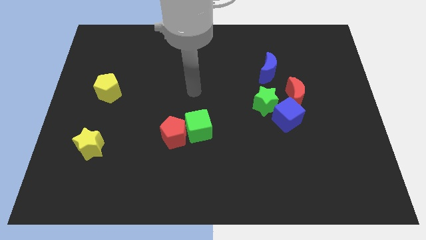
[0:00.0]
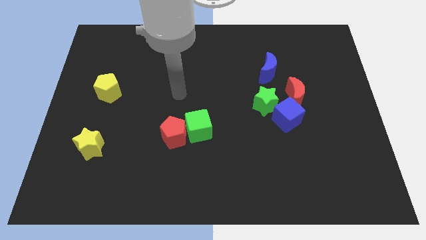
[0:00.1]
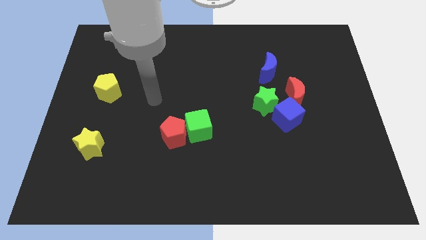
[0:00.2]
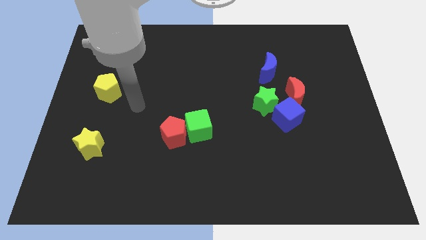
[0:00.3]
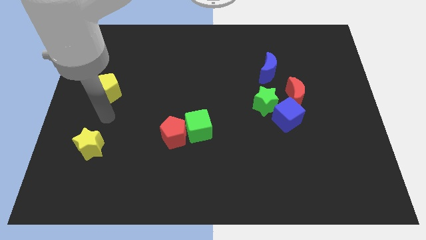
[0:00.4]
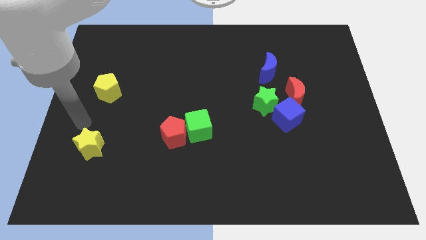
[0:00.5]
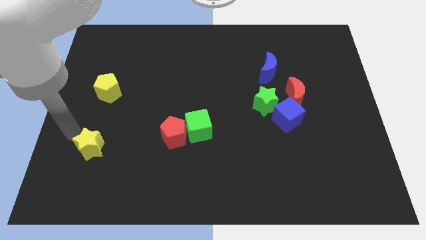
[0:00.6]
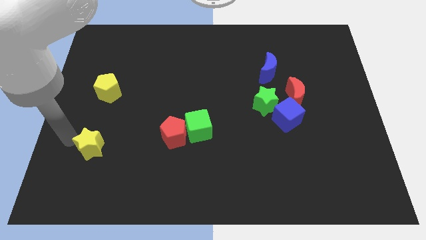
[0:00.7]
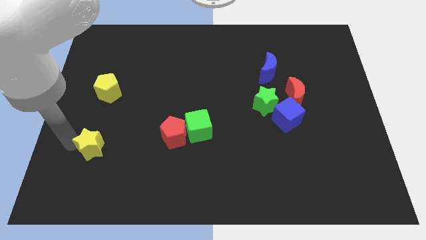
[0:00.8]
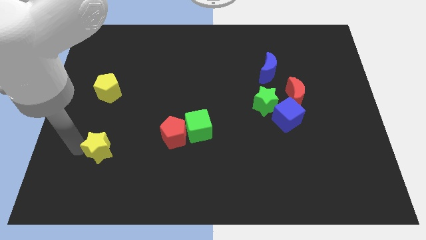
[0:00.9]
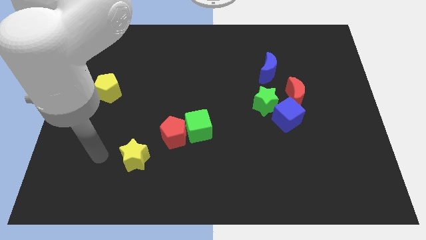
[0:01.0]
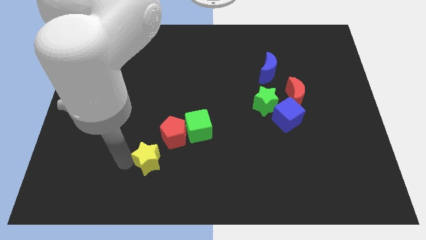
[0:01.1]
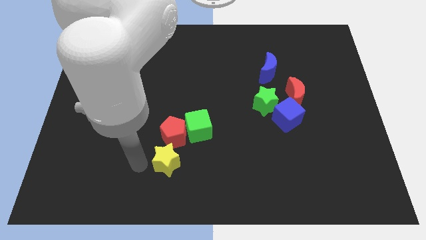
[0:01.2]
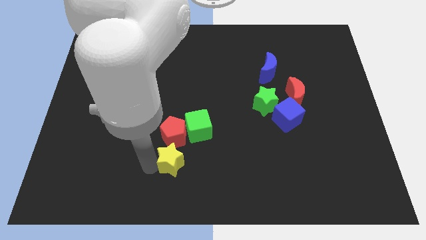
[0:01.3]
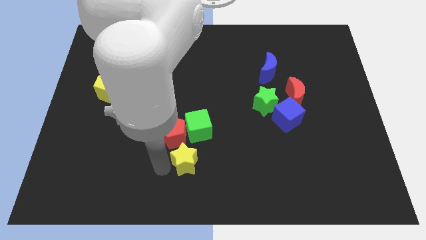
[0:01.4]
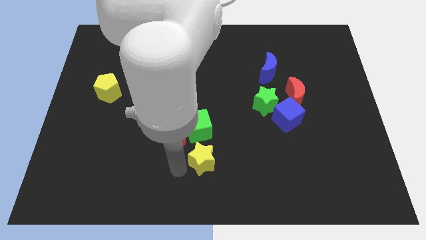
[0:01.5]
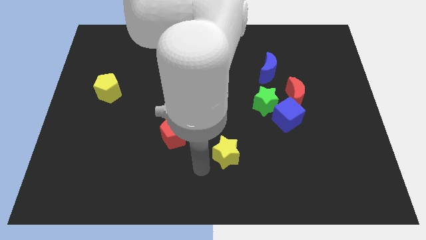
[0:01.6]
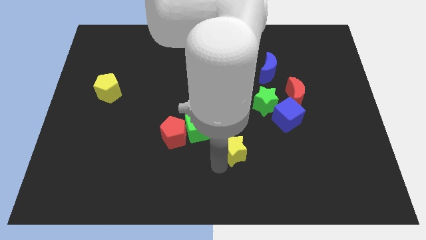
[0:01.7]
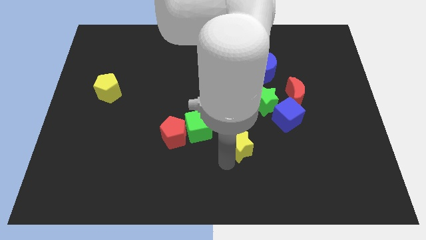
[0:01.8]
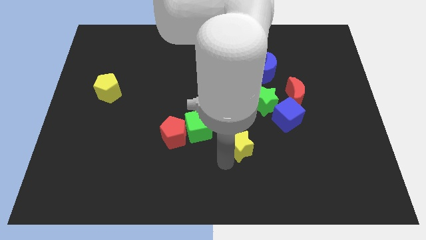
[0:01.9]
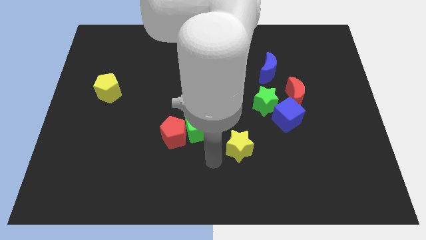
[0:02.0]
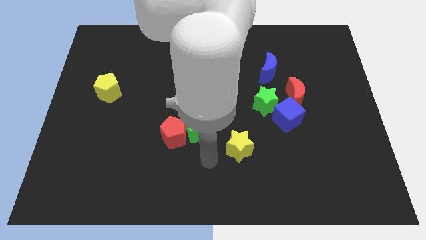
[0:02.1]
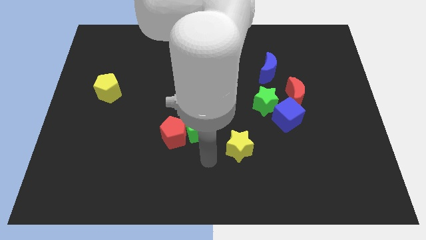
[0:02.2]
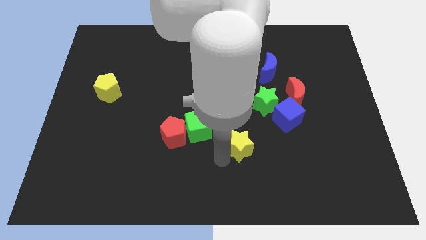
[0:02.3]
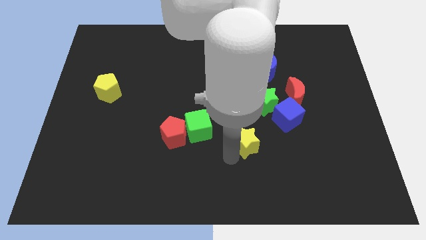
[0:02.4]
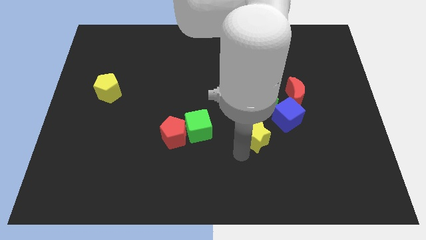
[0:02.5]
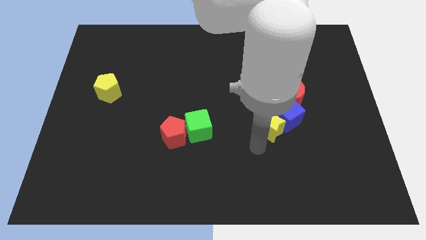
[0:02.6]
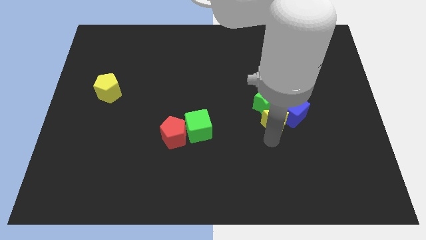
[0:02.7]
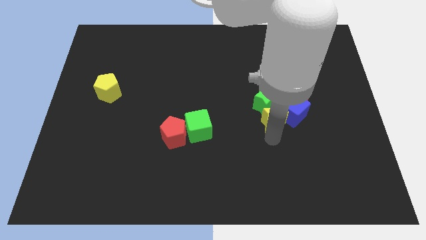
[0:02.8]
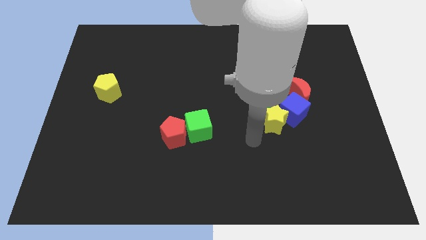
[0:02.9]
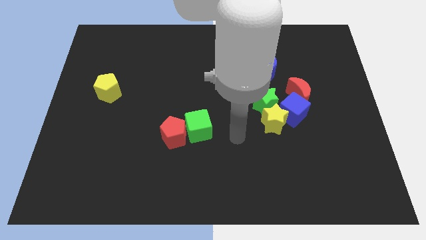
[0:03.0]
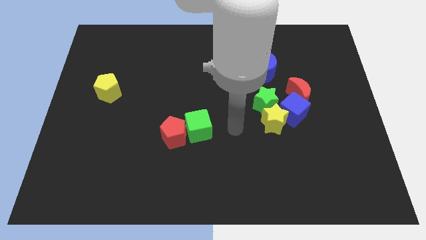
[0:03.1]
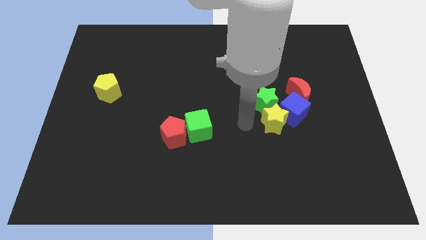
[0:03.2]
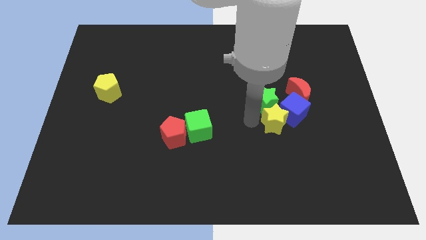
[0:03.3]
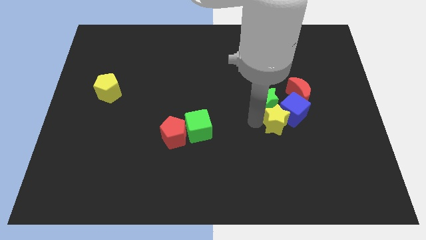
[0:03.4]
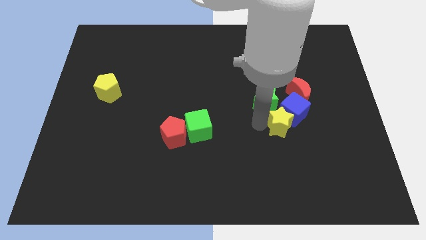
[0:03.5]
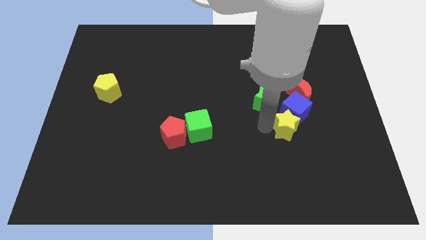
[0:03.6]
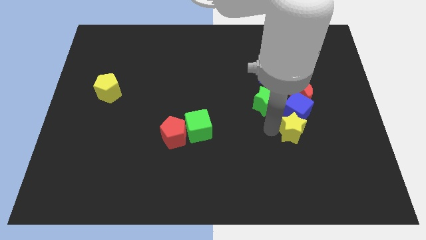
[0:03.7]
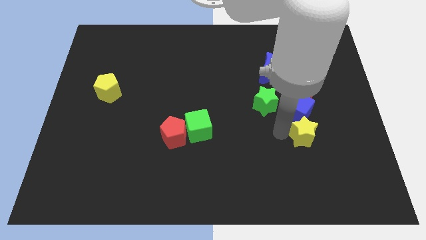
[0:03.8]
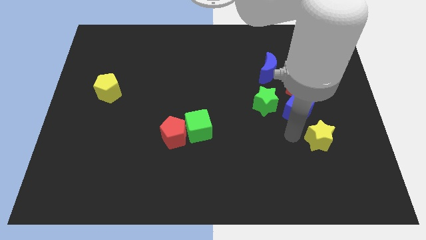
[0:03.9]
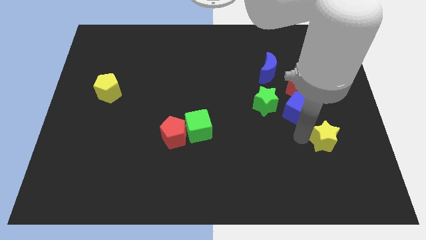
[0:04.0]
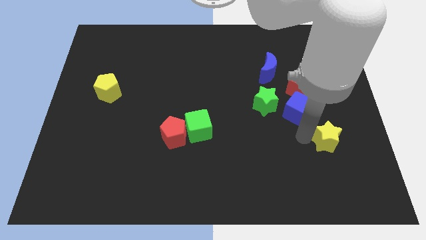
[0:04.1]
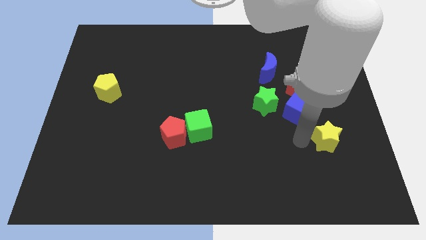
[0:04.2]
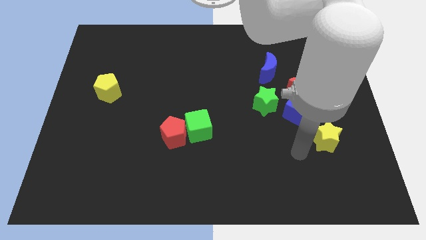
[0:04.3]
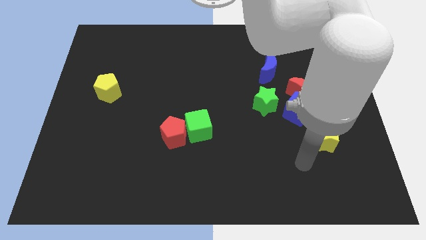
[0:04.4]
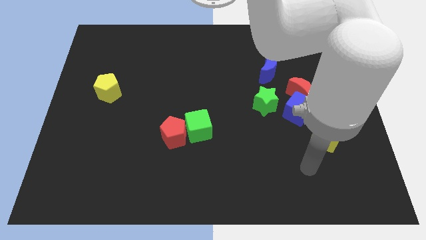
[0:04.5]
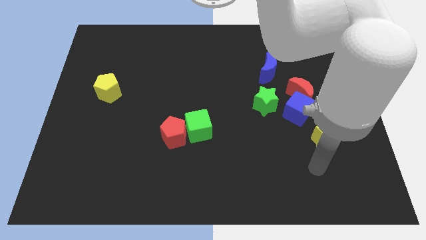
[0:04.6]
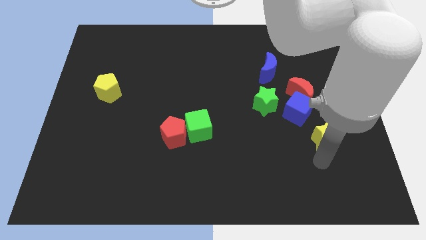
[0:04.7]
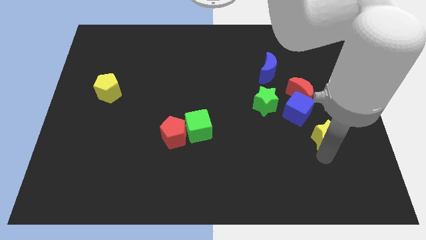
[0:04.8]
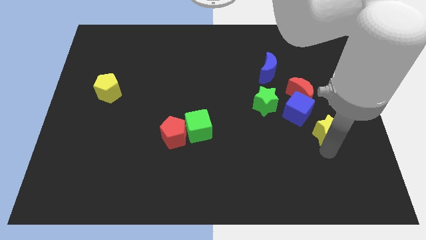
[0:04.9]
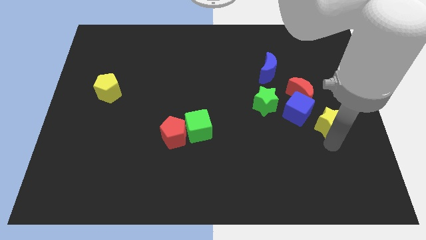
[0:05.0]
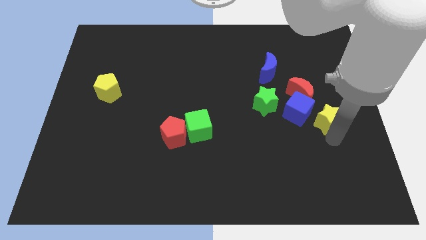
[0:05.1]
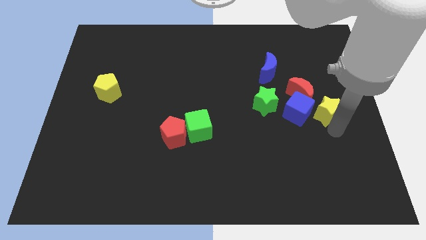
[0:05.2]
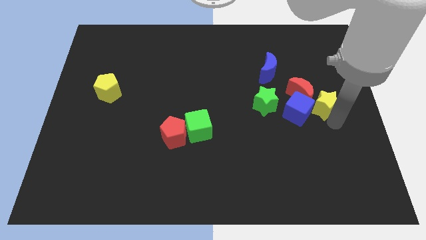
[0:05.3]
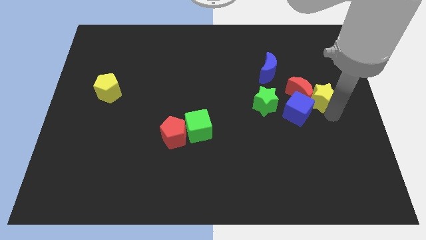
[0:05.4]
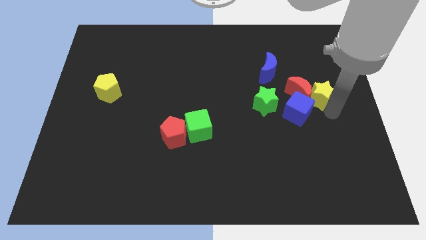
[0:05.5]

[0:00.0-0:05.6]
put the yellow star next to the red moon

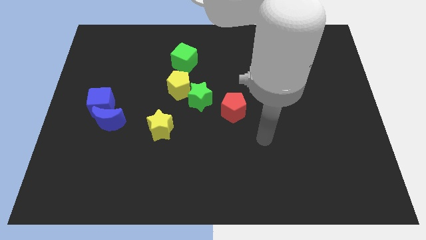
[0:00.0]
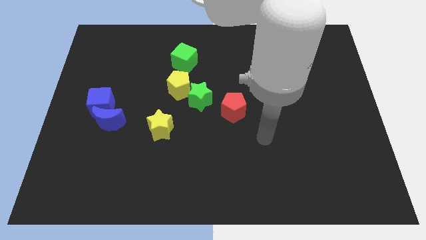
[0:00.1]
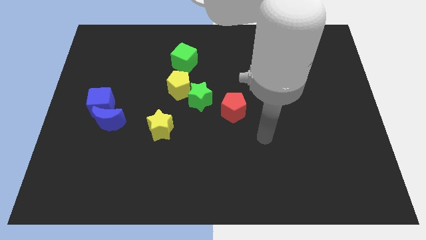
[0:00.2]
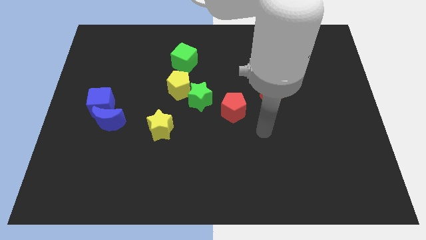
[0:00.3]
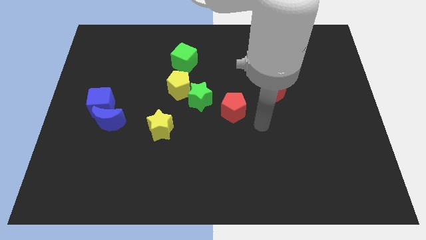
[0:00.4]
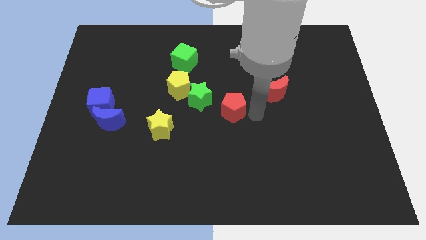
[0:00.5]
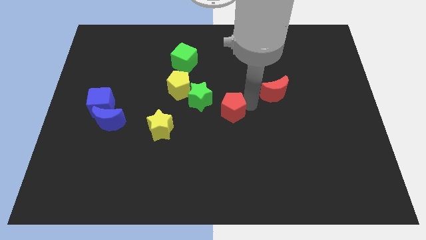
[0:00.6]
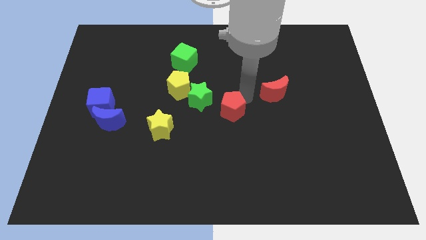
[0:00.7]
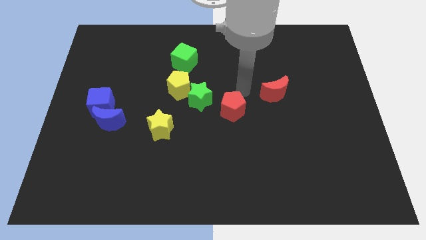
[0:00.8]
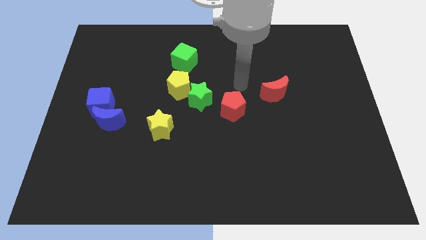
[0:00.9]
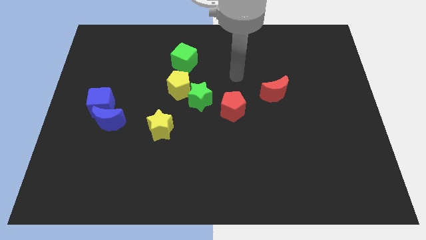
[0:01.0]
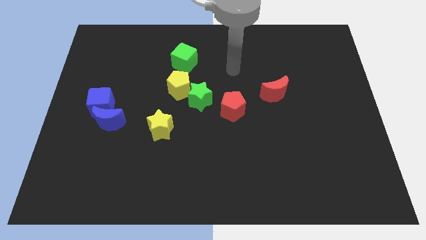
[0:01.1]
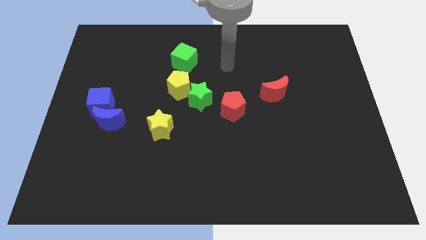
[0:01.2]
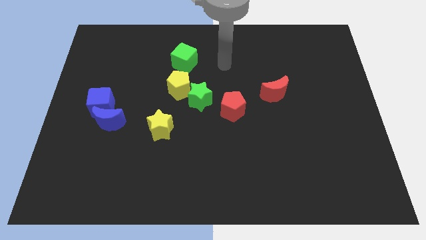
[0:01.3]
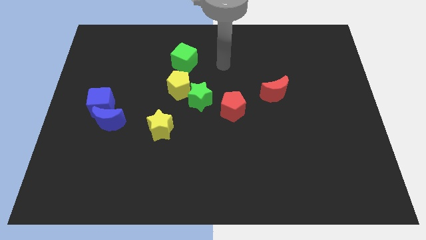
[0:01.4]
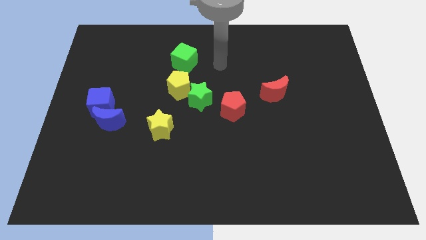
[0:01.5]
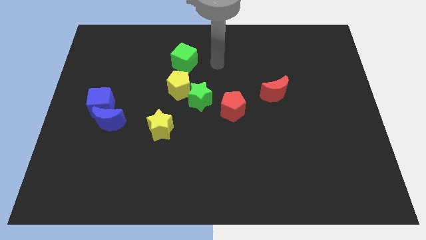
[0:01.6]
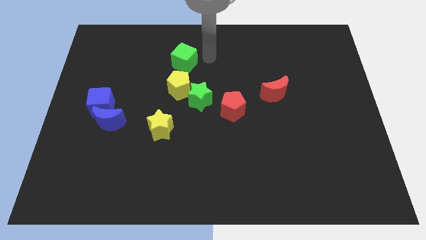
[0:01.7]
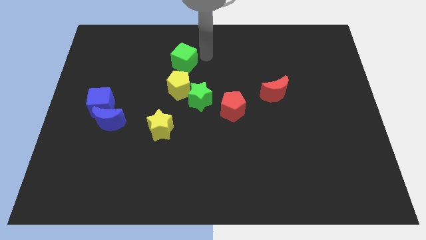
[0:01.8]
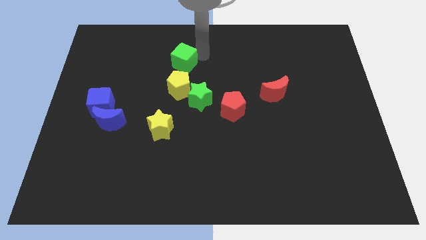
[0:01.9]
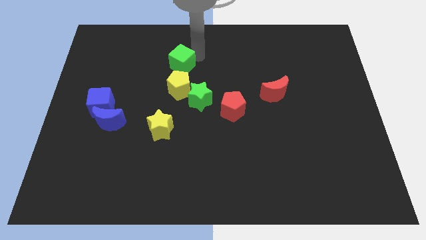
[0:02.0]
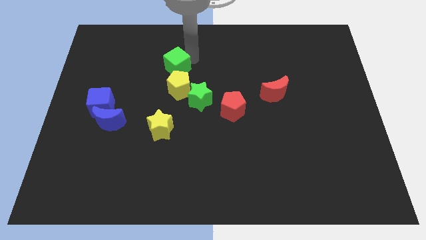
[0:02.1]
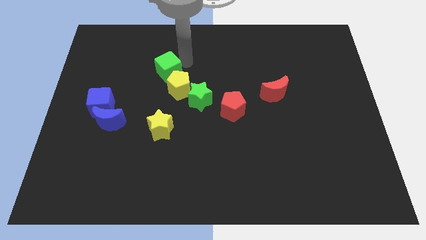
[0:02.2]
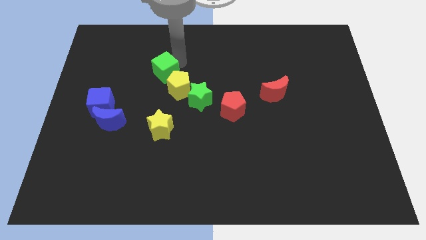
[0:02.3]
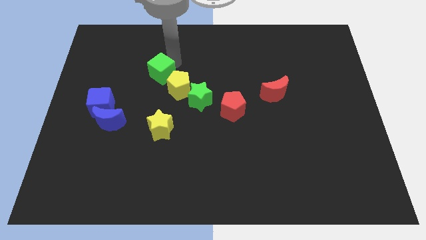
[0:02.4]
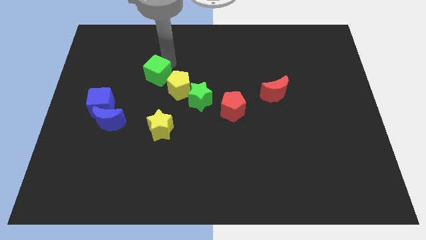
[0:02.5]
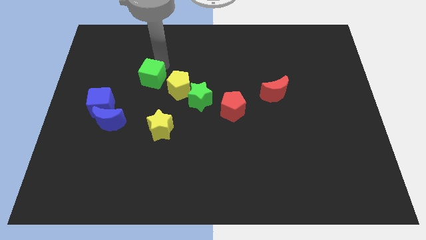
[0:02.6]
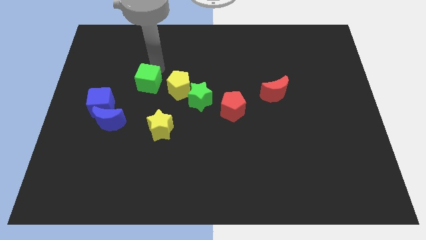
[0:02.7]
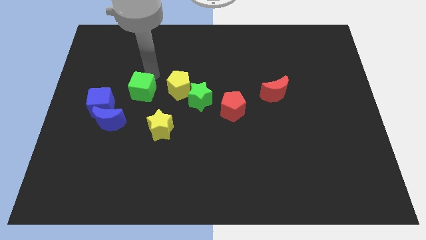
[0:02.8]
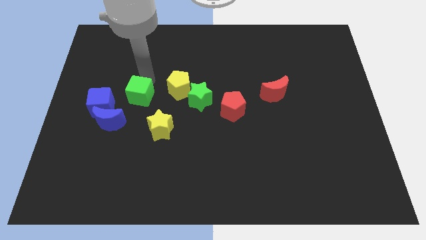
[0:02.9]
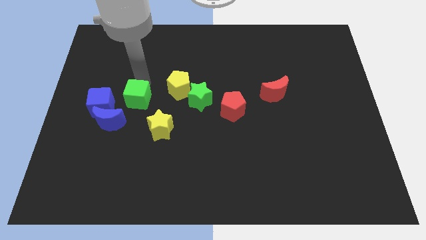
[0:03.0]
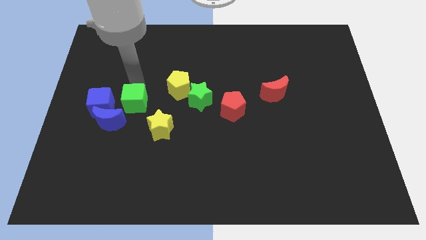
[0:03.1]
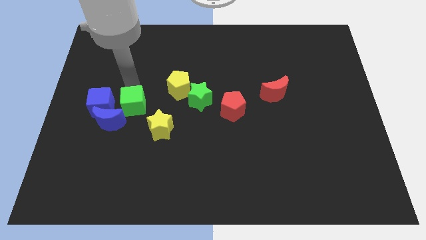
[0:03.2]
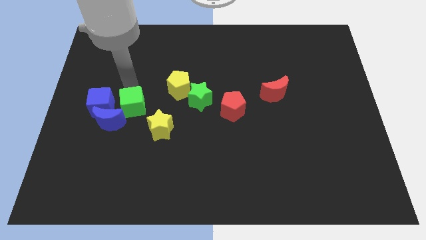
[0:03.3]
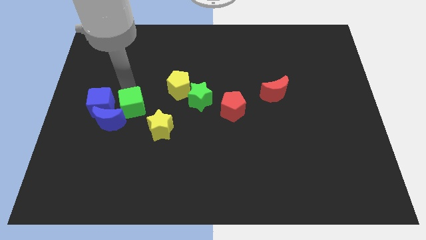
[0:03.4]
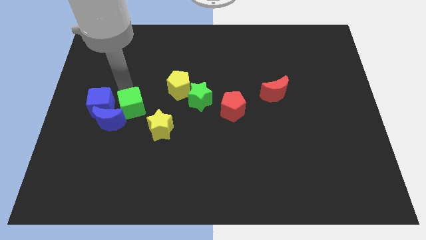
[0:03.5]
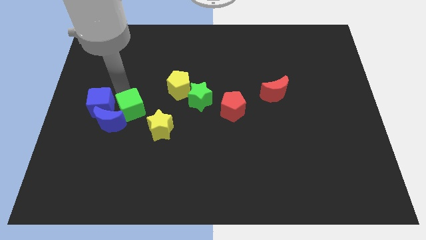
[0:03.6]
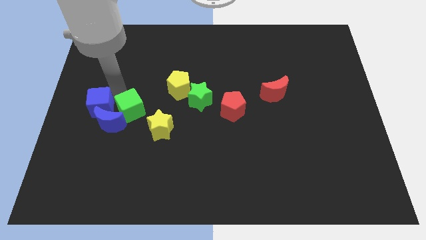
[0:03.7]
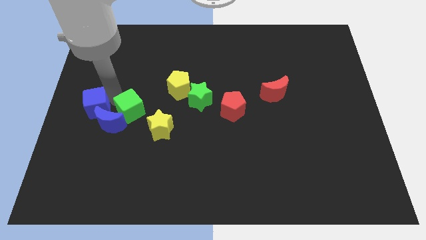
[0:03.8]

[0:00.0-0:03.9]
slide the green cube to the blue moon
